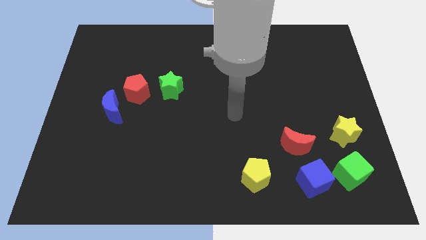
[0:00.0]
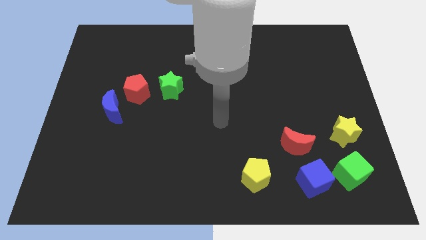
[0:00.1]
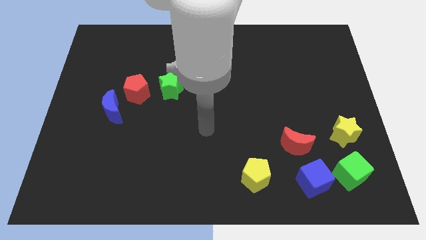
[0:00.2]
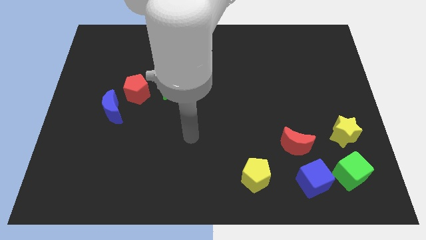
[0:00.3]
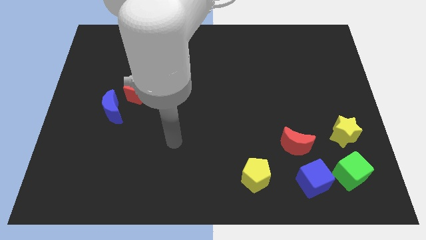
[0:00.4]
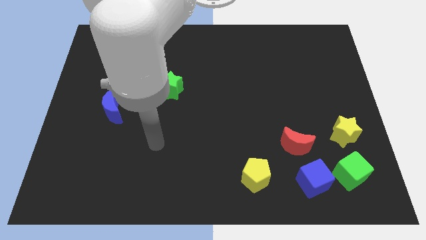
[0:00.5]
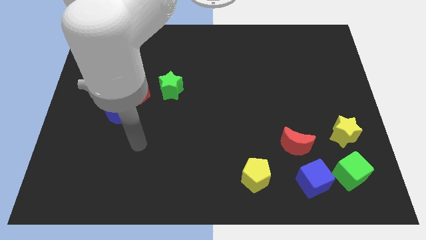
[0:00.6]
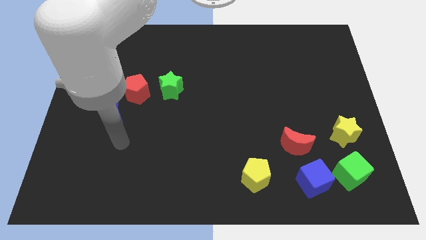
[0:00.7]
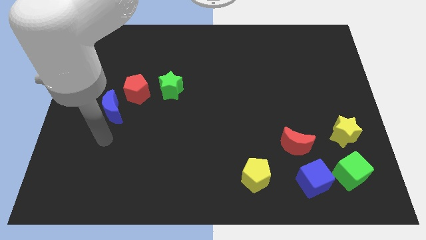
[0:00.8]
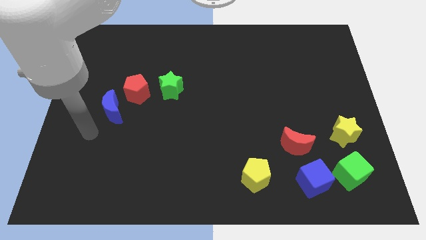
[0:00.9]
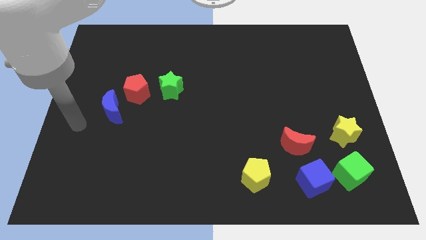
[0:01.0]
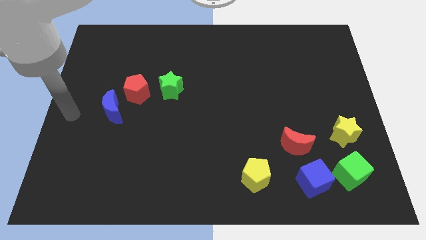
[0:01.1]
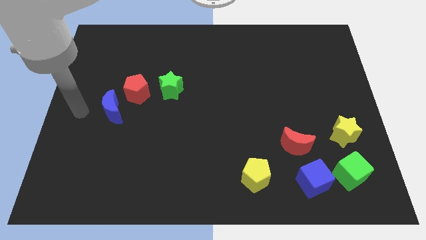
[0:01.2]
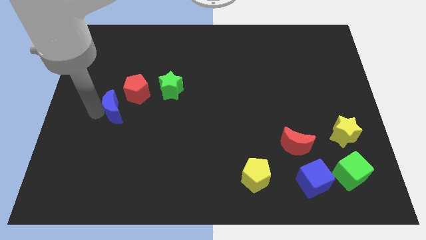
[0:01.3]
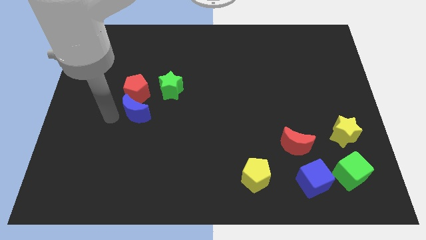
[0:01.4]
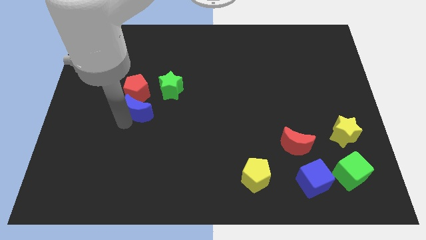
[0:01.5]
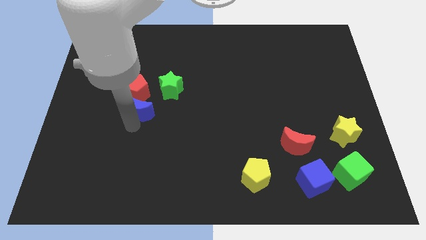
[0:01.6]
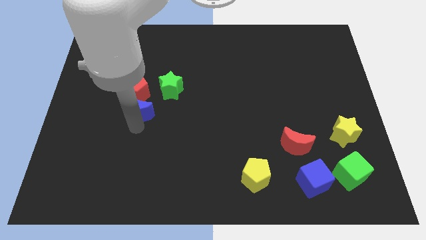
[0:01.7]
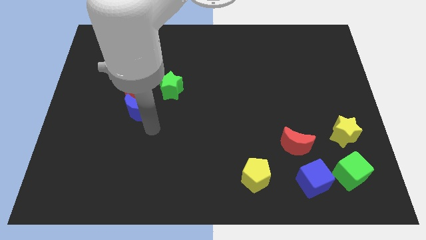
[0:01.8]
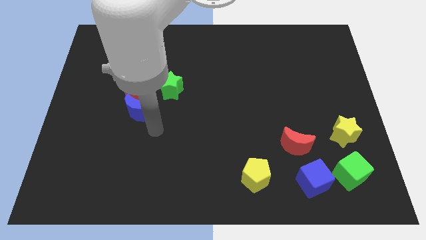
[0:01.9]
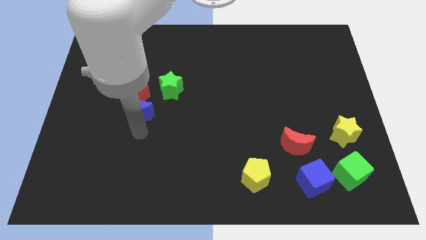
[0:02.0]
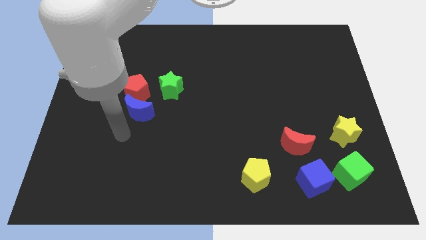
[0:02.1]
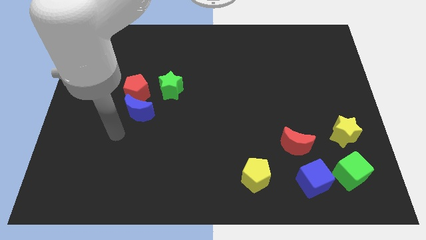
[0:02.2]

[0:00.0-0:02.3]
place the blue moon below the red pentagon

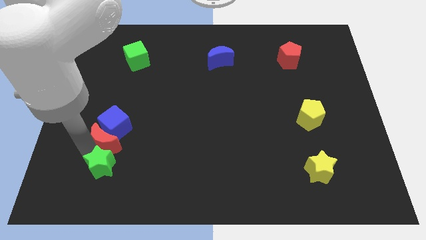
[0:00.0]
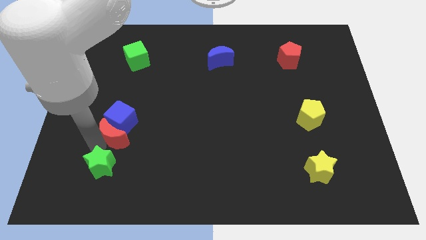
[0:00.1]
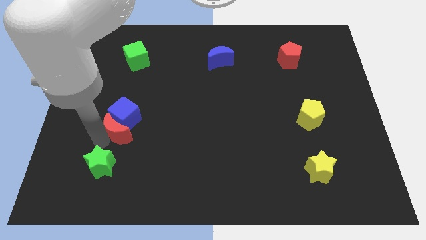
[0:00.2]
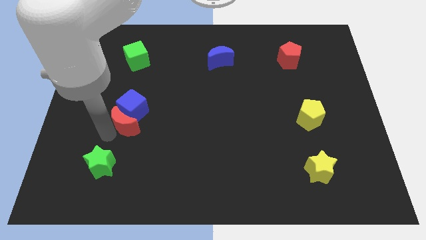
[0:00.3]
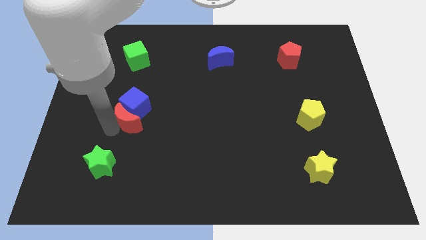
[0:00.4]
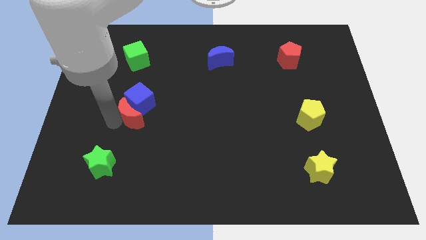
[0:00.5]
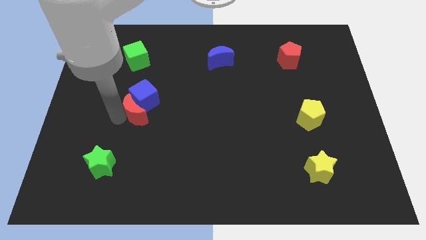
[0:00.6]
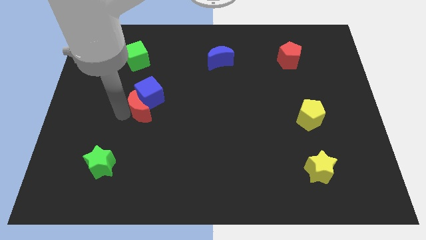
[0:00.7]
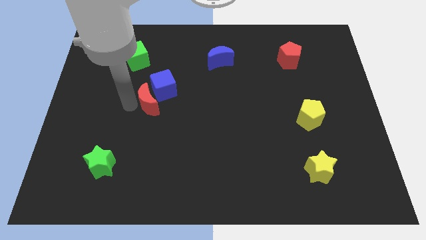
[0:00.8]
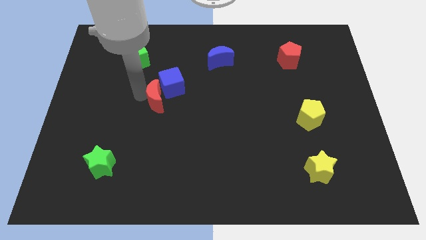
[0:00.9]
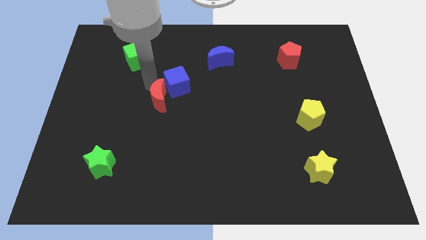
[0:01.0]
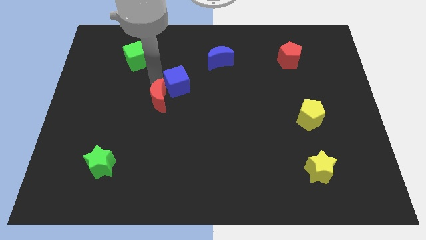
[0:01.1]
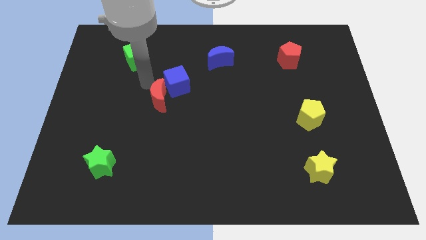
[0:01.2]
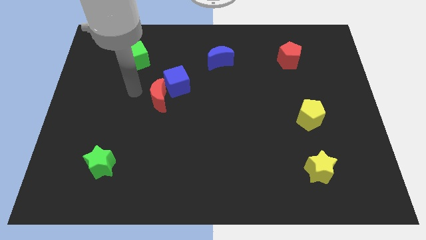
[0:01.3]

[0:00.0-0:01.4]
push the red crescent and blue cube away from the green star

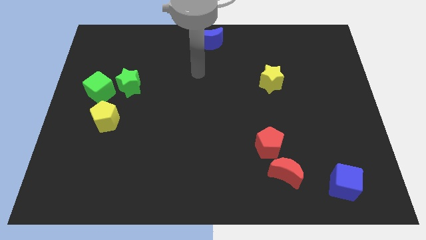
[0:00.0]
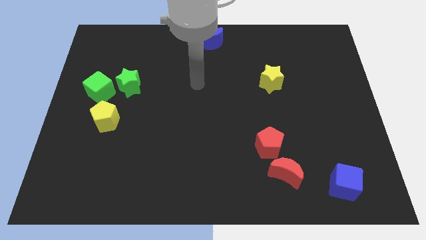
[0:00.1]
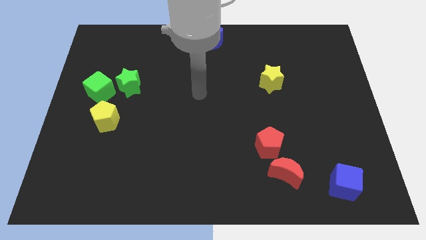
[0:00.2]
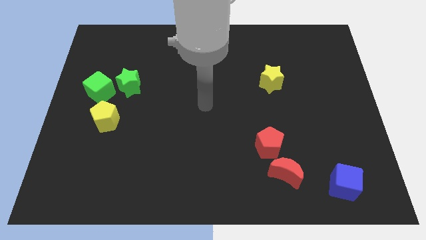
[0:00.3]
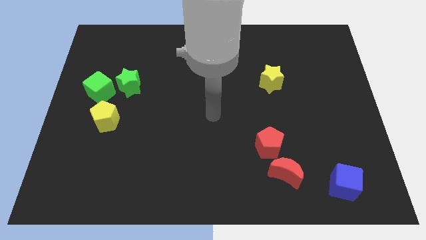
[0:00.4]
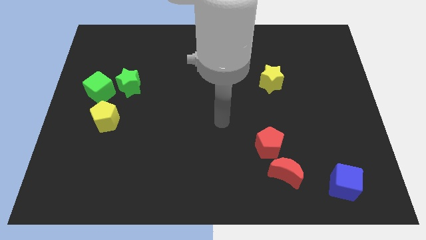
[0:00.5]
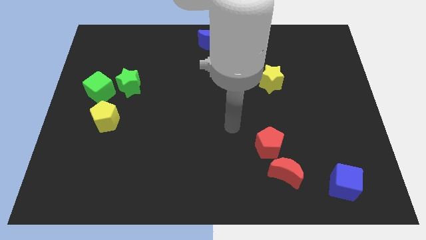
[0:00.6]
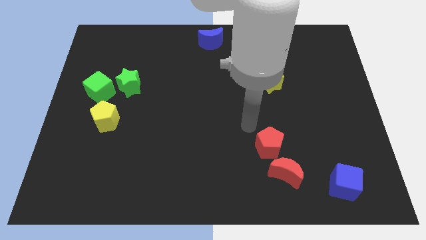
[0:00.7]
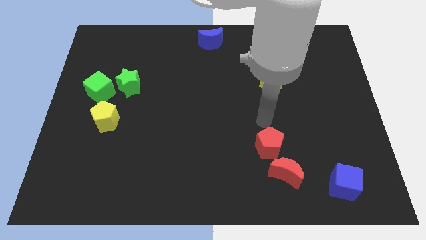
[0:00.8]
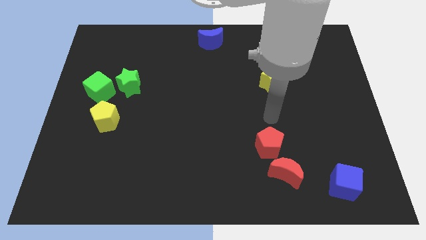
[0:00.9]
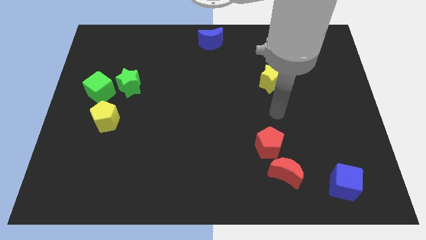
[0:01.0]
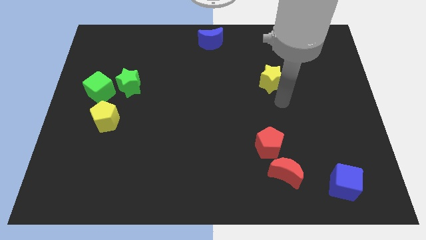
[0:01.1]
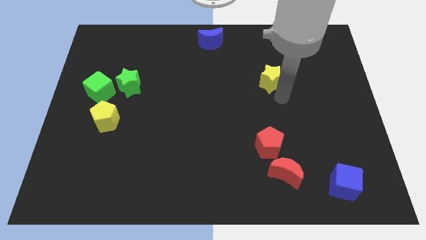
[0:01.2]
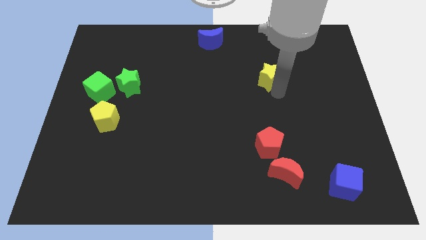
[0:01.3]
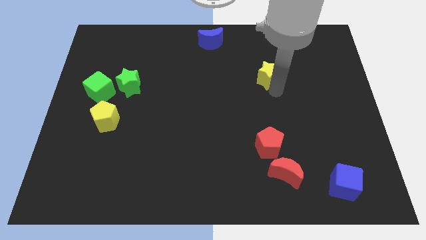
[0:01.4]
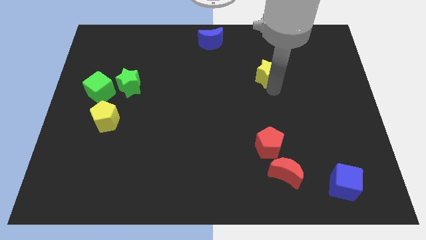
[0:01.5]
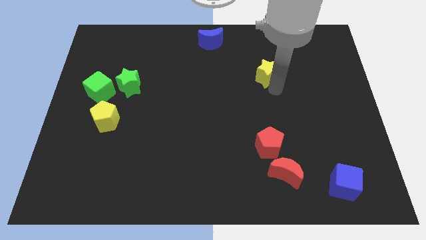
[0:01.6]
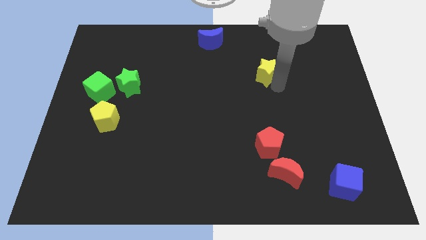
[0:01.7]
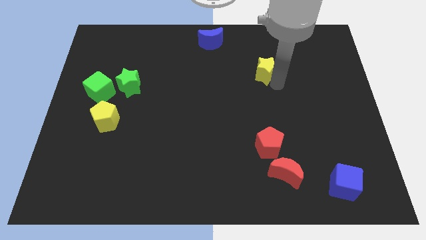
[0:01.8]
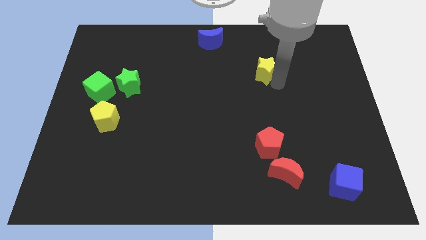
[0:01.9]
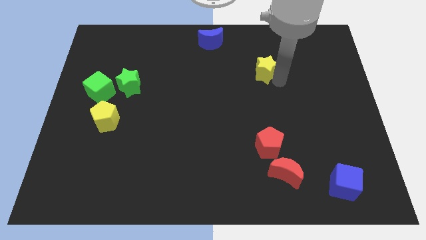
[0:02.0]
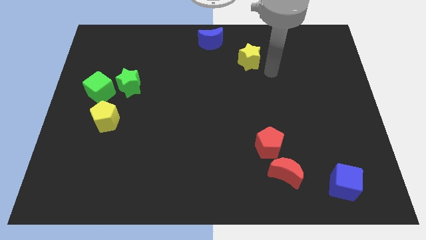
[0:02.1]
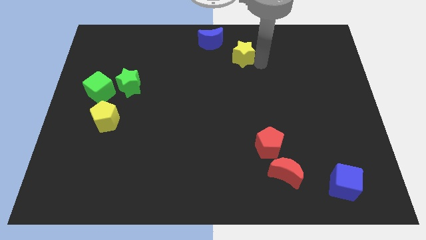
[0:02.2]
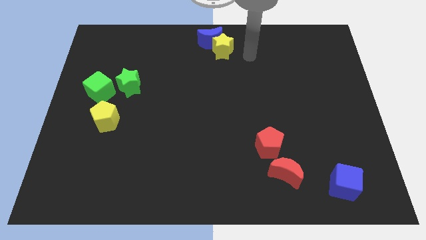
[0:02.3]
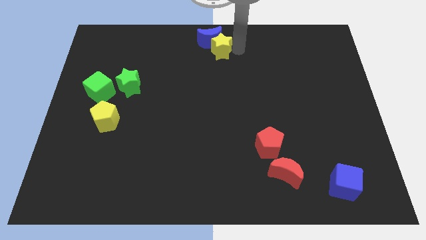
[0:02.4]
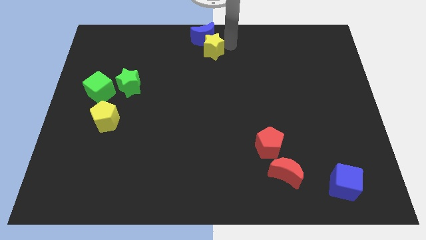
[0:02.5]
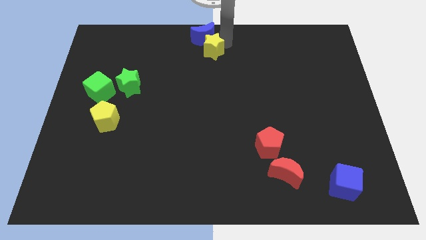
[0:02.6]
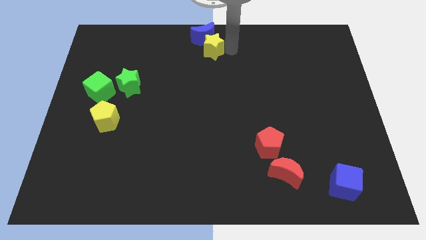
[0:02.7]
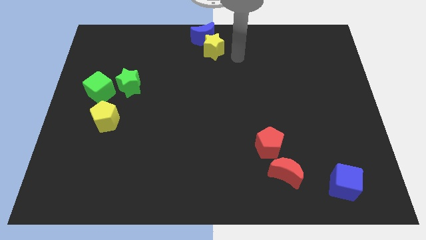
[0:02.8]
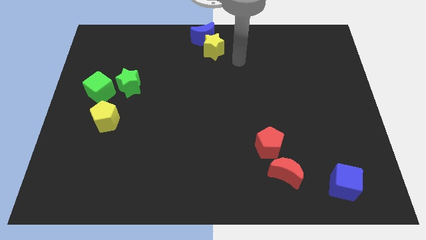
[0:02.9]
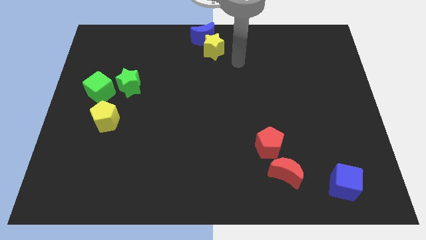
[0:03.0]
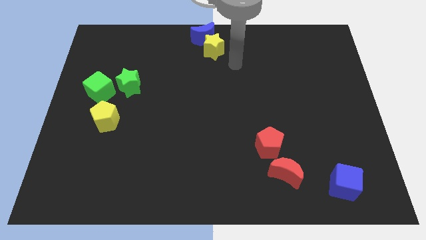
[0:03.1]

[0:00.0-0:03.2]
push the yellow star towards the top center

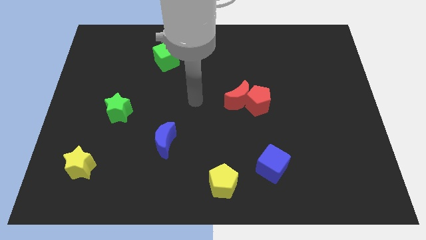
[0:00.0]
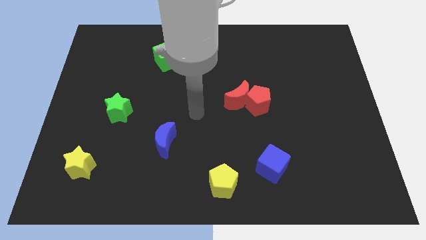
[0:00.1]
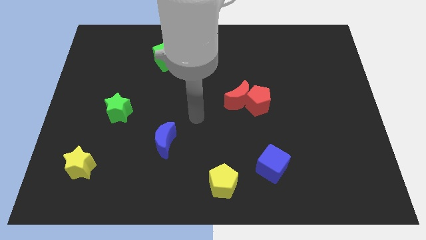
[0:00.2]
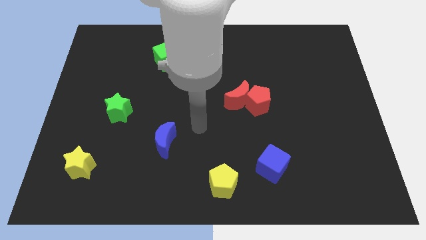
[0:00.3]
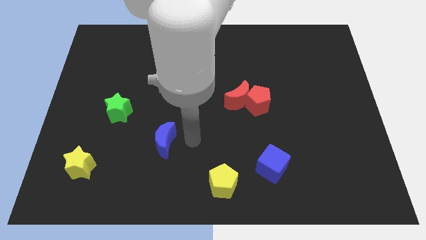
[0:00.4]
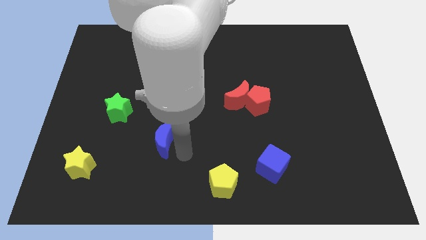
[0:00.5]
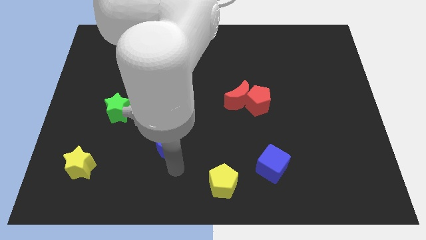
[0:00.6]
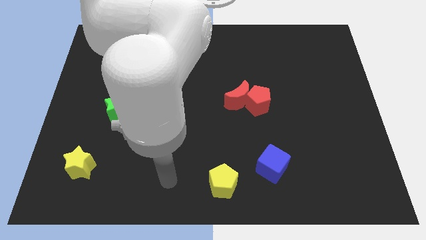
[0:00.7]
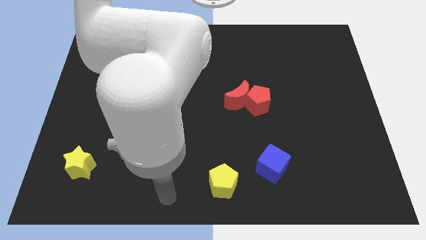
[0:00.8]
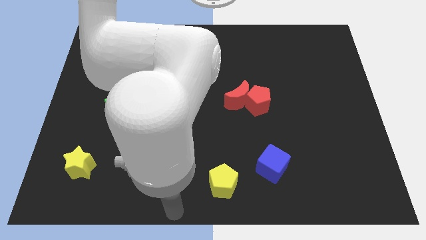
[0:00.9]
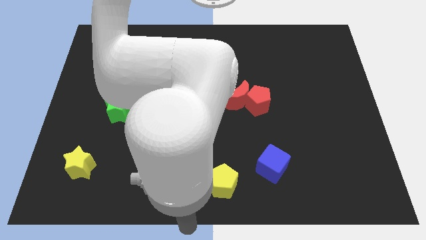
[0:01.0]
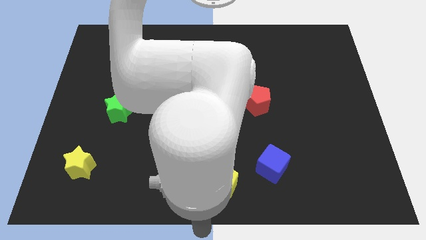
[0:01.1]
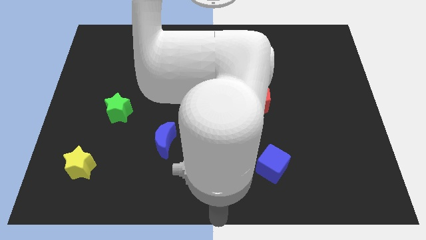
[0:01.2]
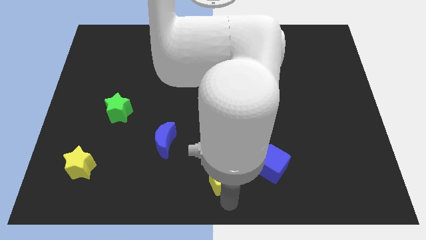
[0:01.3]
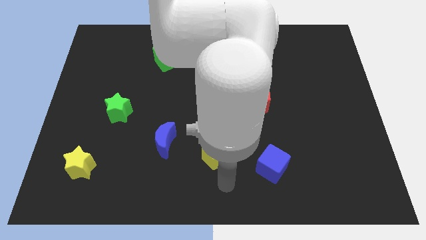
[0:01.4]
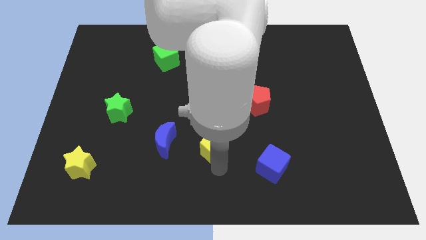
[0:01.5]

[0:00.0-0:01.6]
place the yellow pentagon in between the blue moon and blue cube

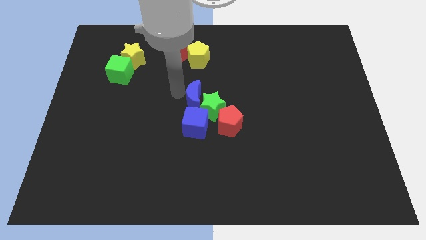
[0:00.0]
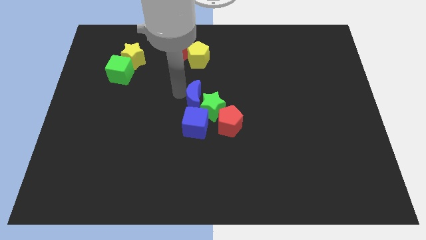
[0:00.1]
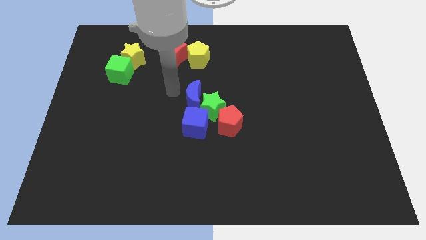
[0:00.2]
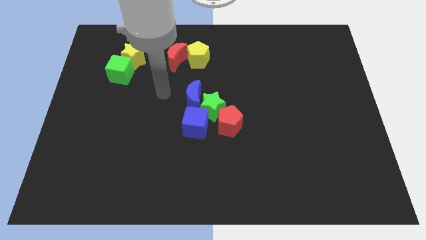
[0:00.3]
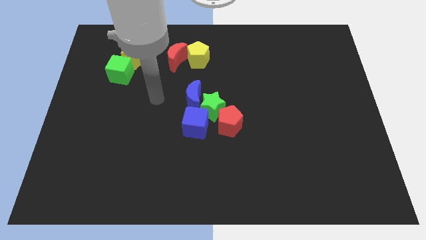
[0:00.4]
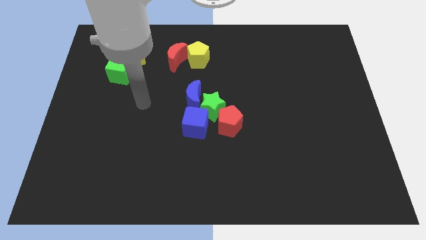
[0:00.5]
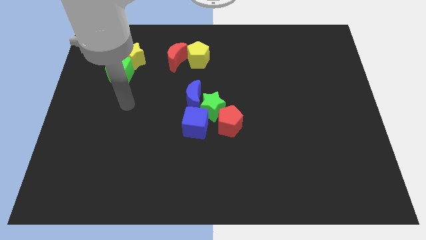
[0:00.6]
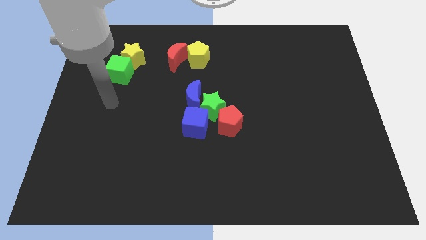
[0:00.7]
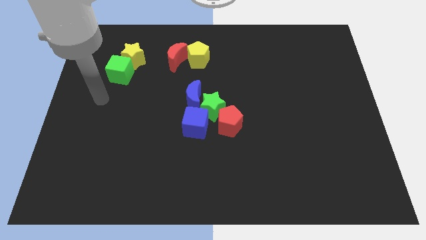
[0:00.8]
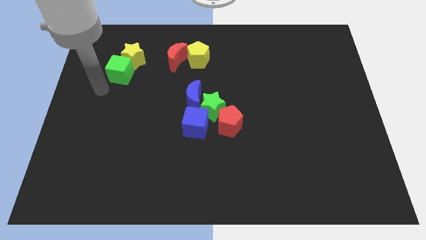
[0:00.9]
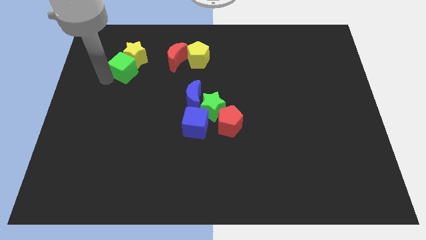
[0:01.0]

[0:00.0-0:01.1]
point the arm to the bottom left of the green cube
